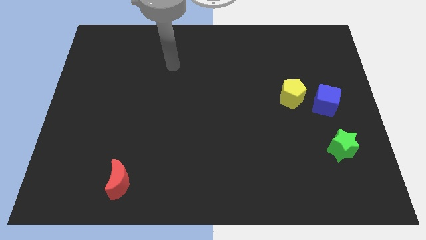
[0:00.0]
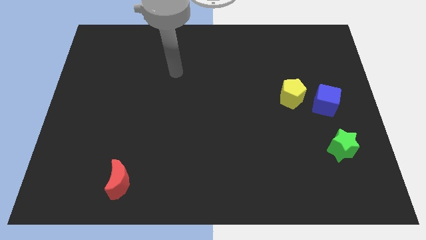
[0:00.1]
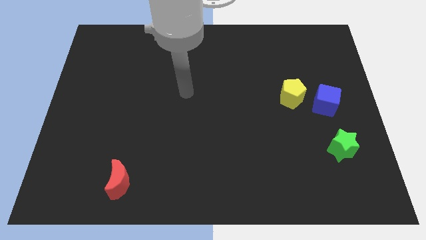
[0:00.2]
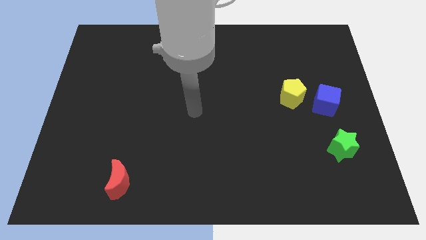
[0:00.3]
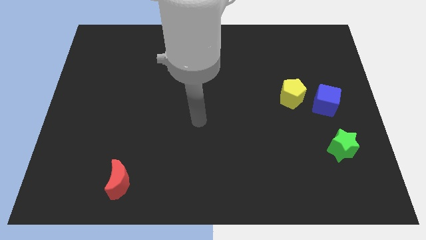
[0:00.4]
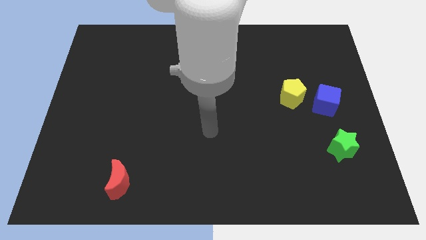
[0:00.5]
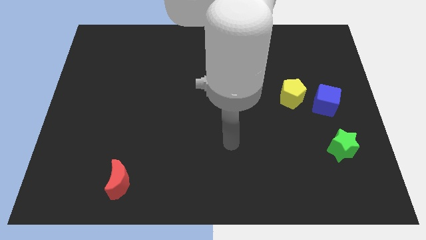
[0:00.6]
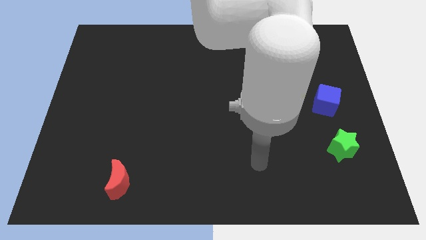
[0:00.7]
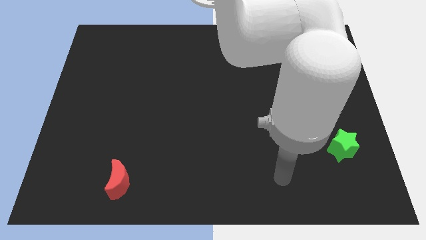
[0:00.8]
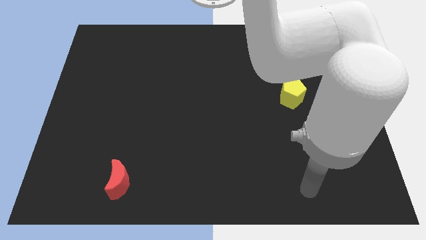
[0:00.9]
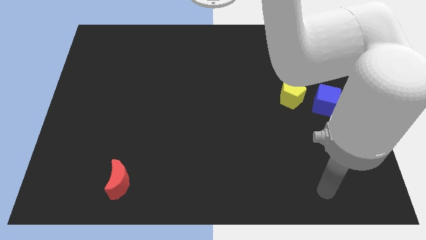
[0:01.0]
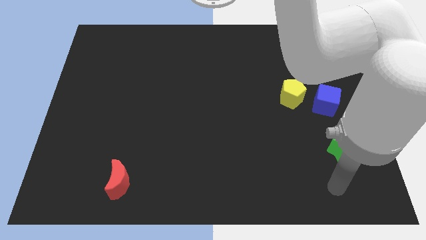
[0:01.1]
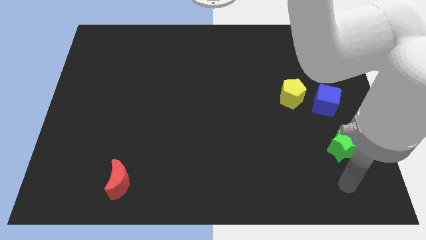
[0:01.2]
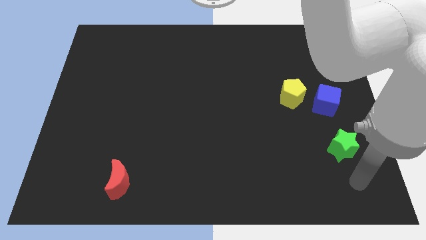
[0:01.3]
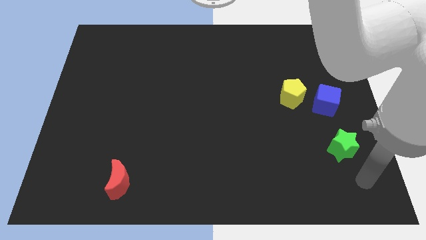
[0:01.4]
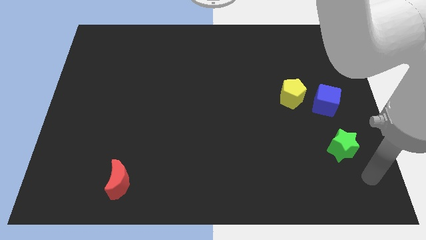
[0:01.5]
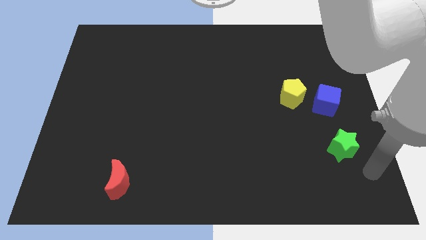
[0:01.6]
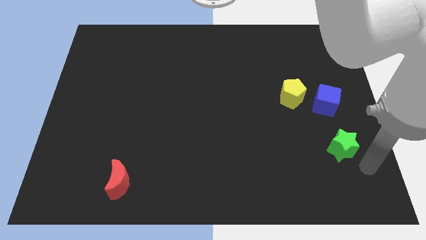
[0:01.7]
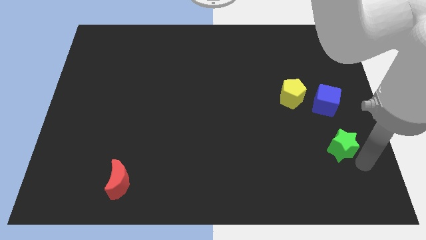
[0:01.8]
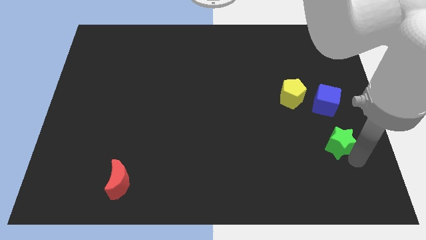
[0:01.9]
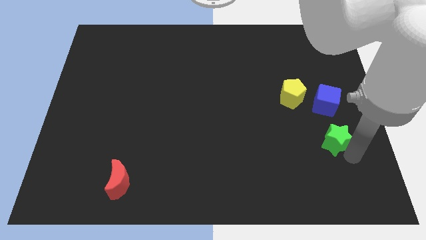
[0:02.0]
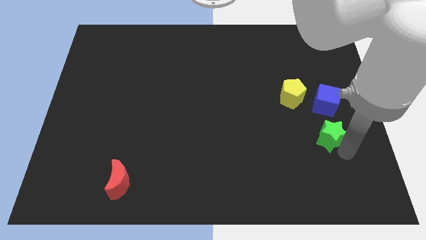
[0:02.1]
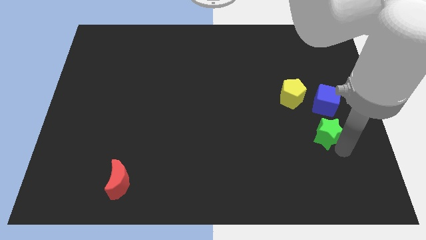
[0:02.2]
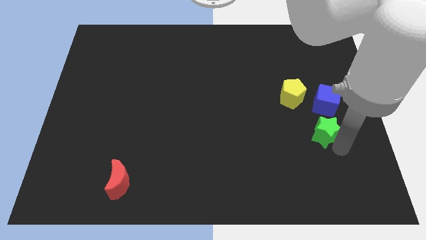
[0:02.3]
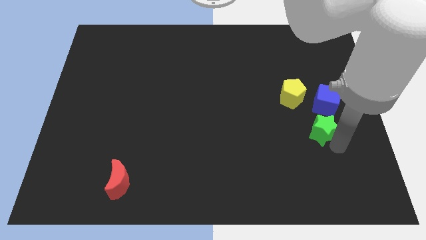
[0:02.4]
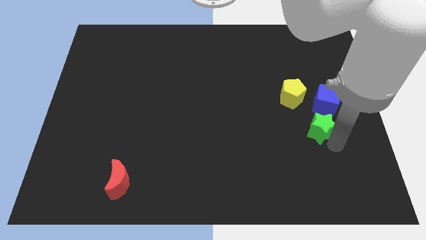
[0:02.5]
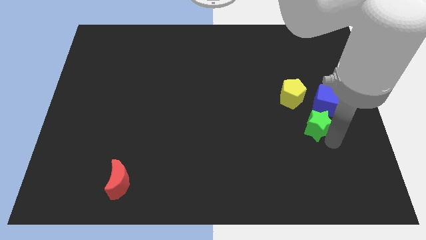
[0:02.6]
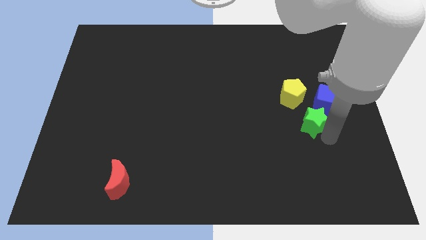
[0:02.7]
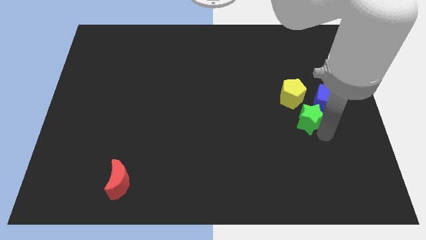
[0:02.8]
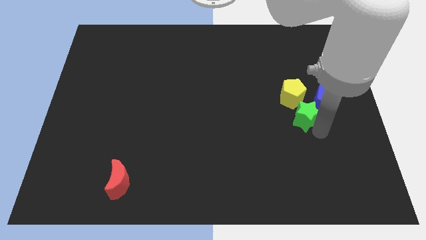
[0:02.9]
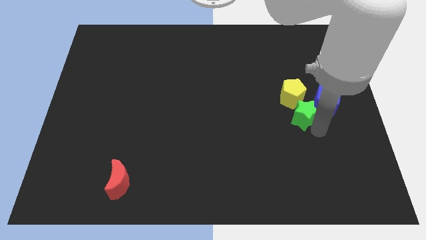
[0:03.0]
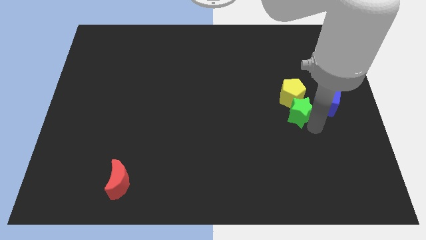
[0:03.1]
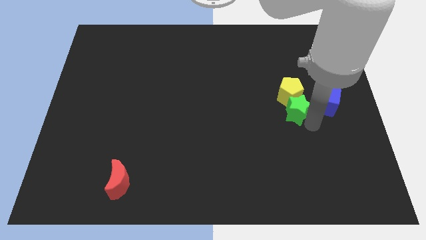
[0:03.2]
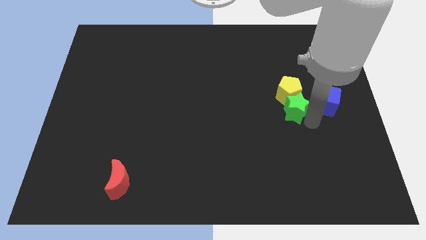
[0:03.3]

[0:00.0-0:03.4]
slide the green star to the yellow block

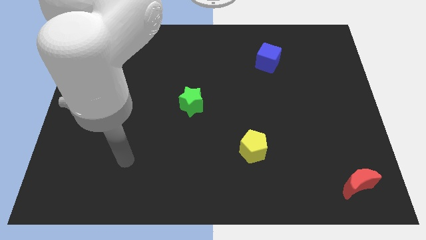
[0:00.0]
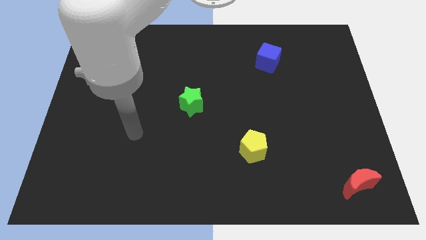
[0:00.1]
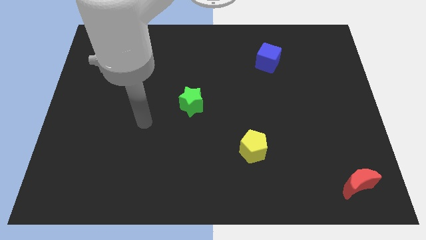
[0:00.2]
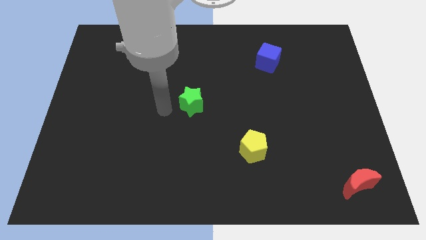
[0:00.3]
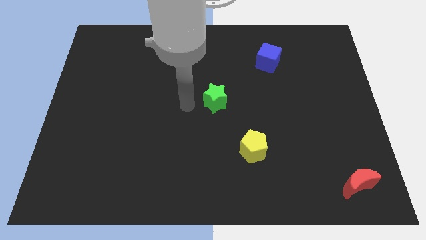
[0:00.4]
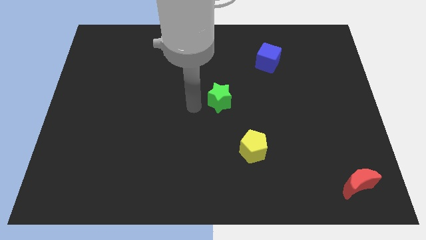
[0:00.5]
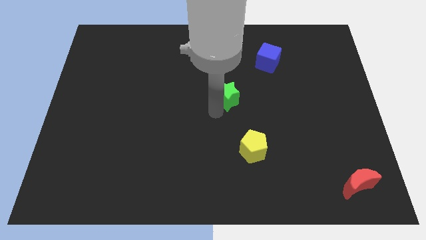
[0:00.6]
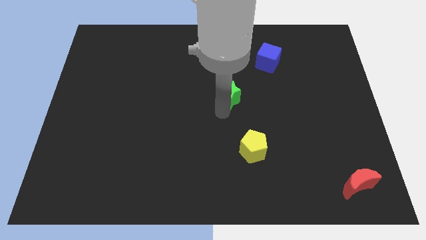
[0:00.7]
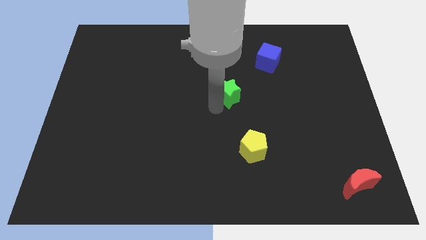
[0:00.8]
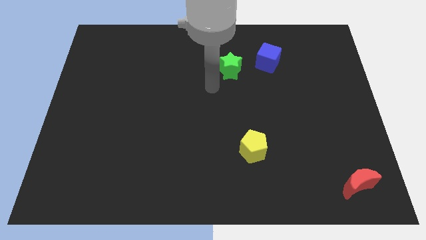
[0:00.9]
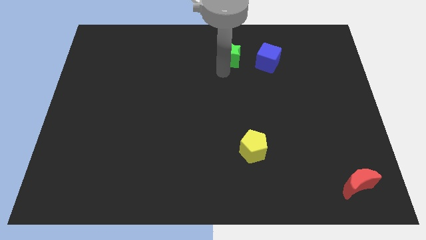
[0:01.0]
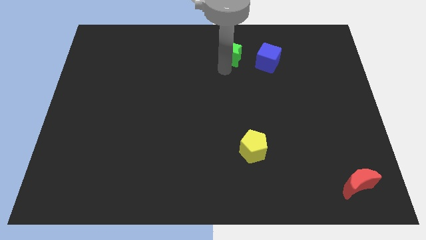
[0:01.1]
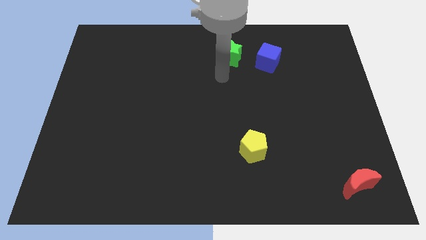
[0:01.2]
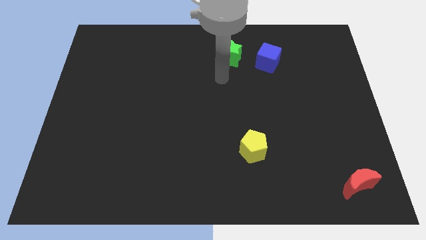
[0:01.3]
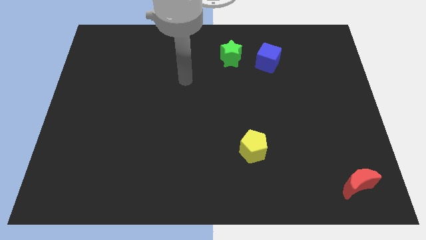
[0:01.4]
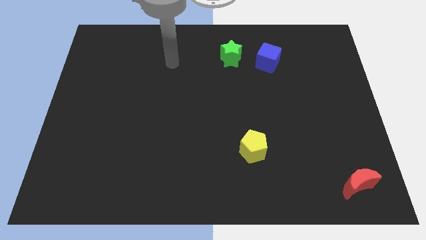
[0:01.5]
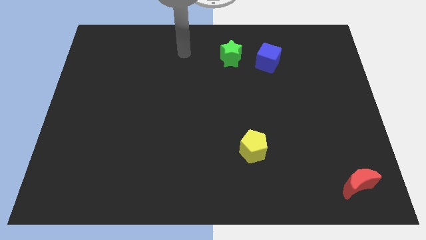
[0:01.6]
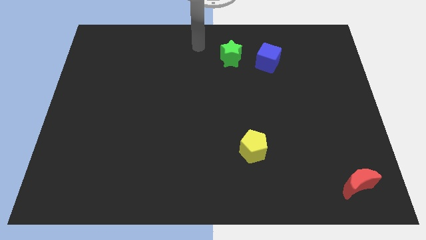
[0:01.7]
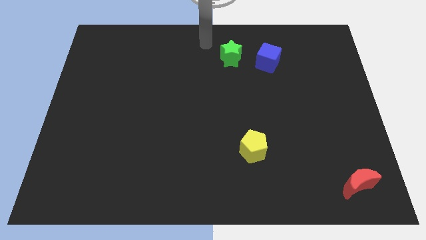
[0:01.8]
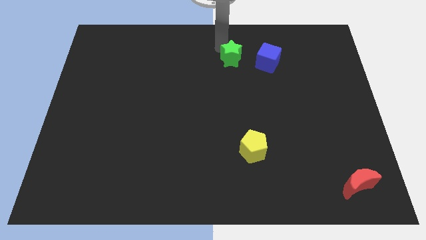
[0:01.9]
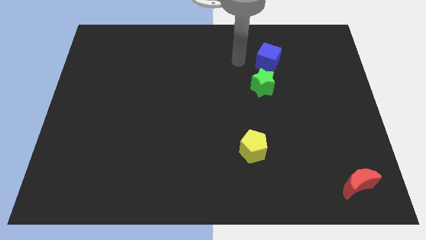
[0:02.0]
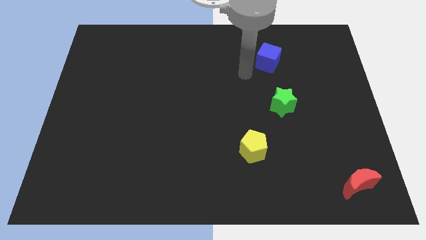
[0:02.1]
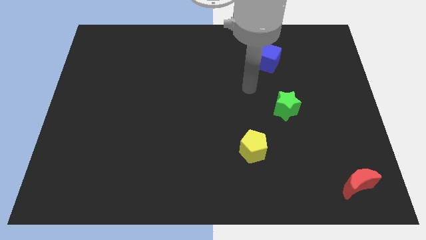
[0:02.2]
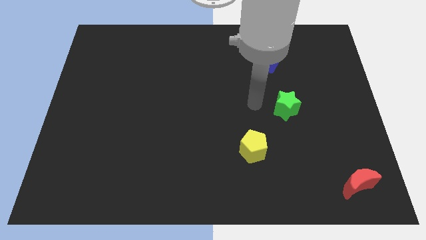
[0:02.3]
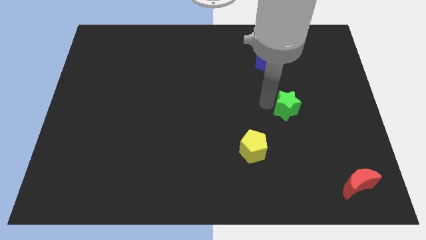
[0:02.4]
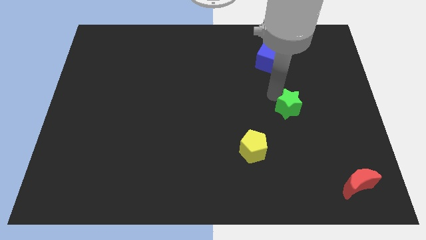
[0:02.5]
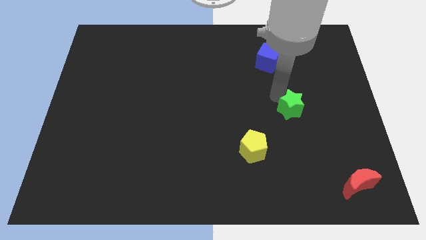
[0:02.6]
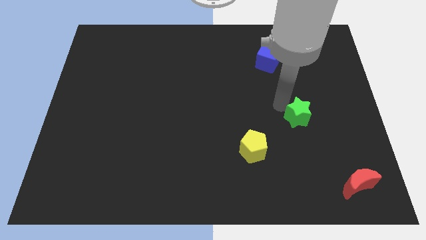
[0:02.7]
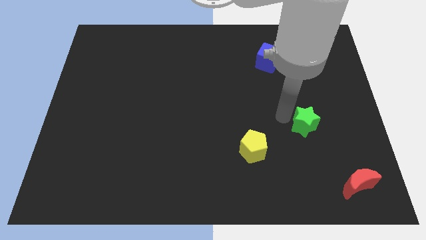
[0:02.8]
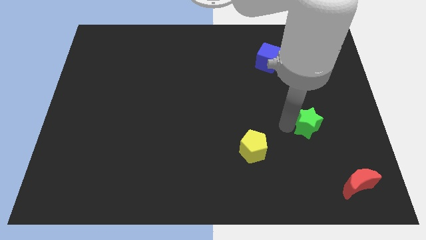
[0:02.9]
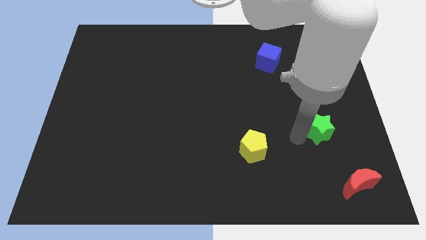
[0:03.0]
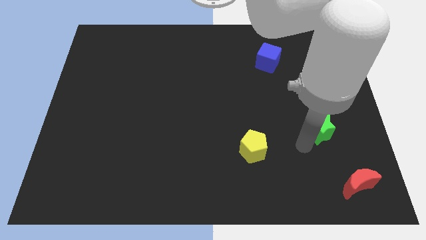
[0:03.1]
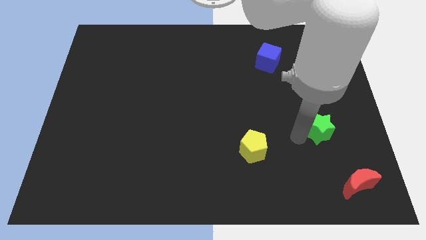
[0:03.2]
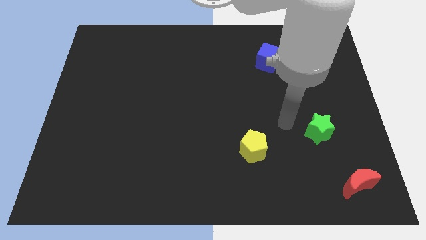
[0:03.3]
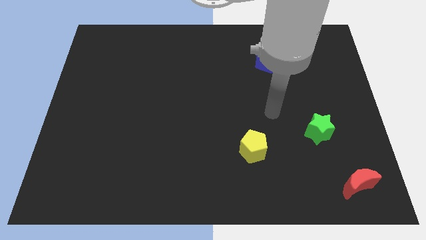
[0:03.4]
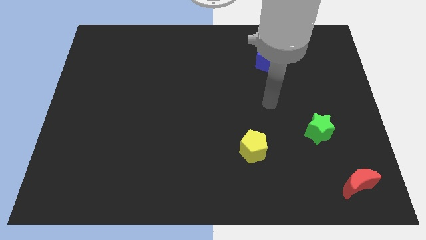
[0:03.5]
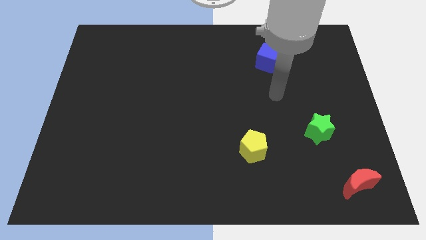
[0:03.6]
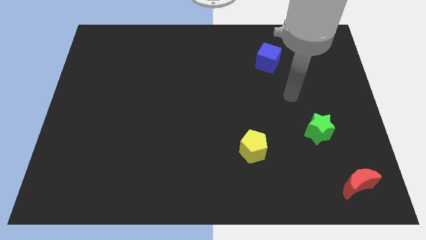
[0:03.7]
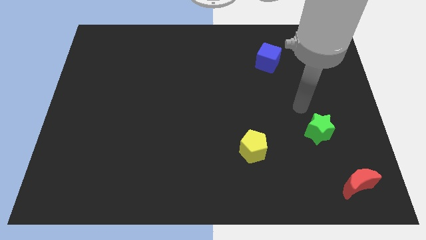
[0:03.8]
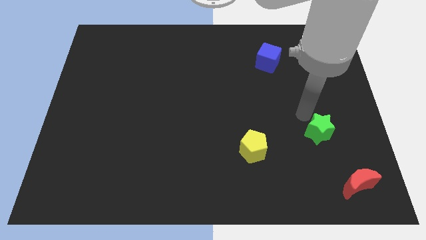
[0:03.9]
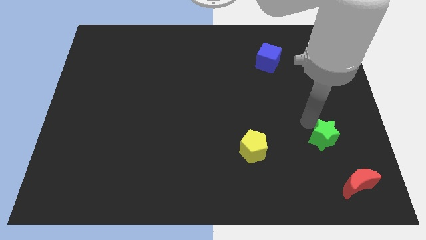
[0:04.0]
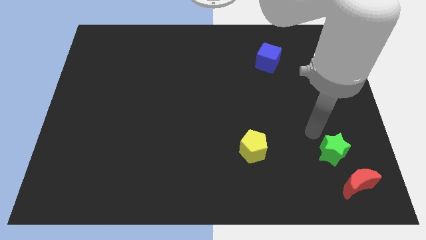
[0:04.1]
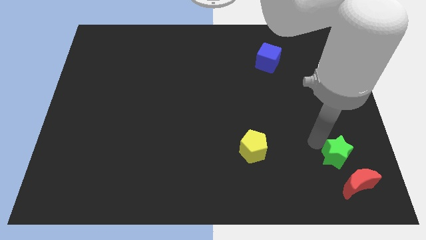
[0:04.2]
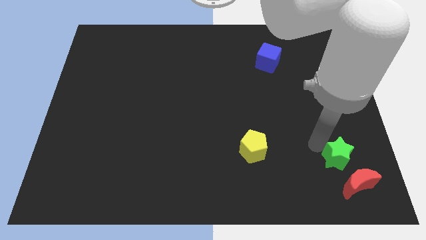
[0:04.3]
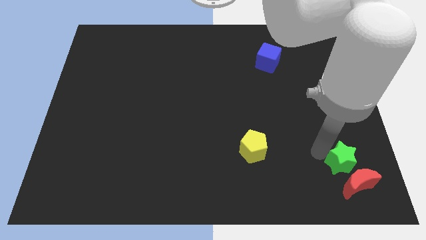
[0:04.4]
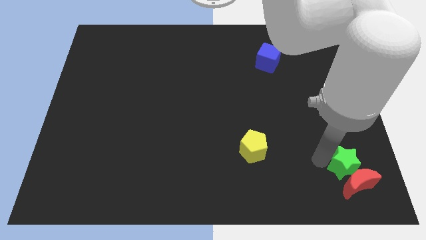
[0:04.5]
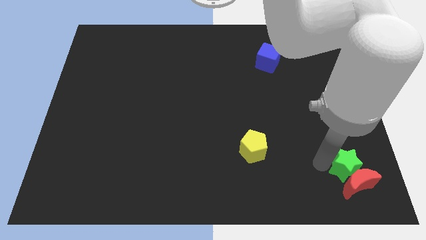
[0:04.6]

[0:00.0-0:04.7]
push the star to the moon

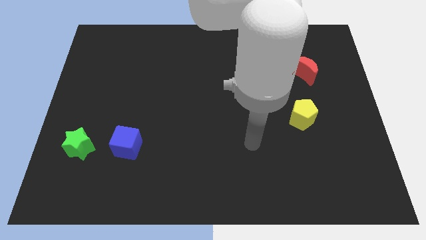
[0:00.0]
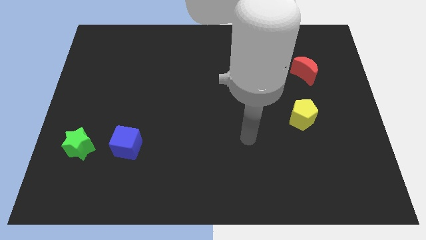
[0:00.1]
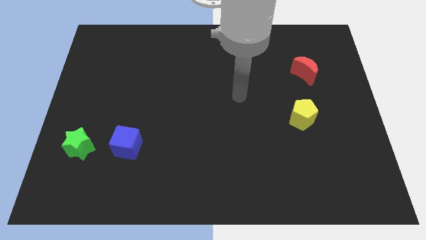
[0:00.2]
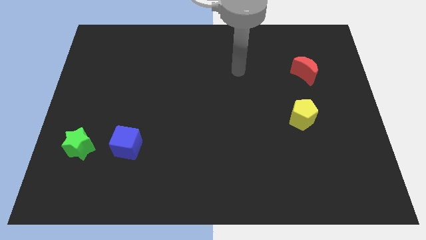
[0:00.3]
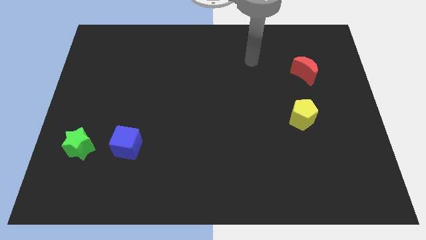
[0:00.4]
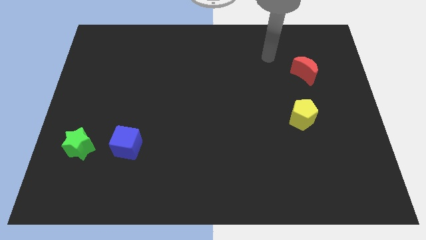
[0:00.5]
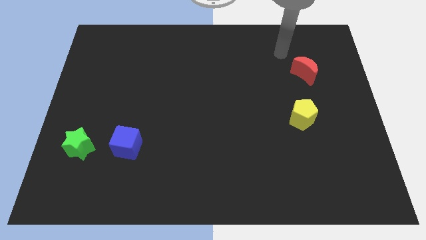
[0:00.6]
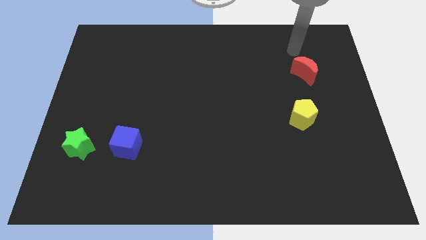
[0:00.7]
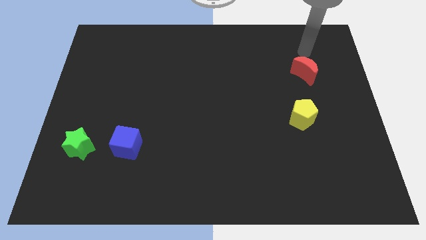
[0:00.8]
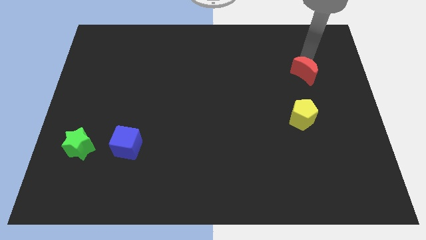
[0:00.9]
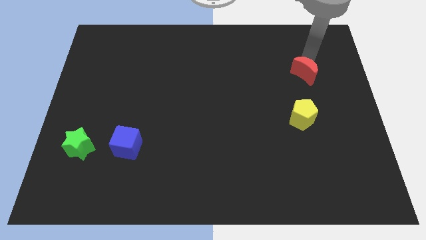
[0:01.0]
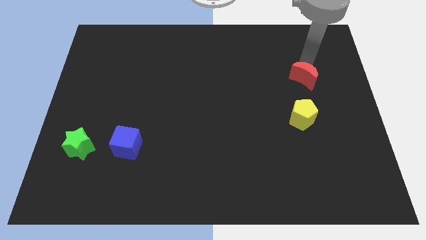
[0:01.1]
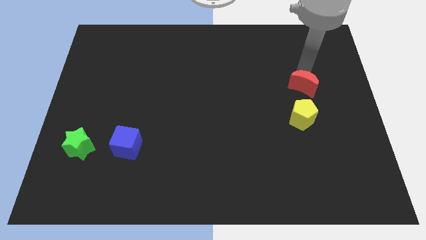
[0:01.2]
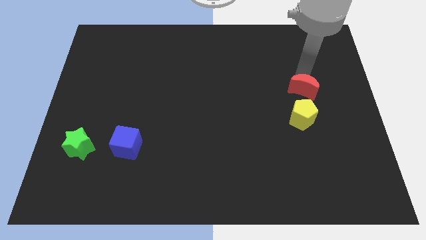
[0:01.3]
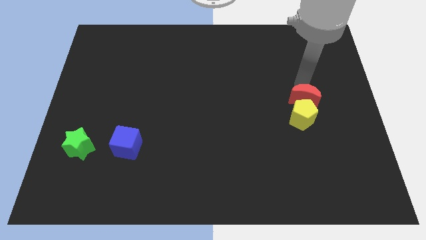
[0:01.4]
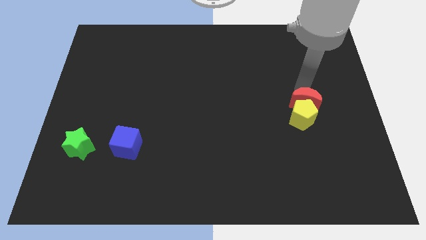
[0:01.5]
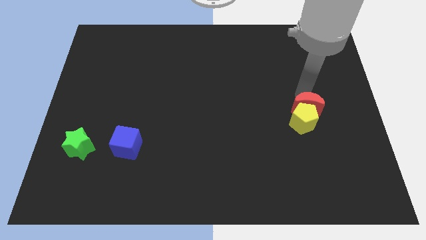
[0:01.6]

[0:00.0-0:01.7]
put the moon close to the yellow pentagon
